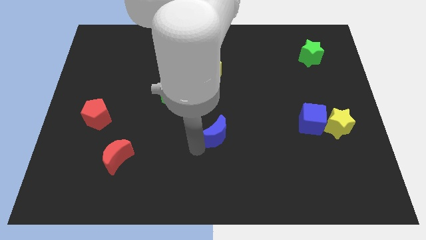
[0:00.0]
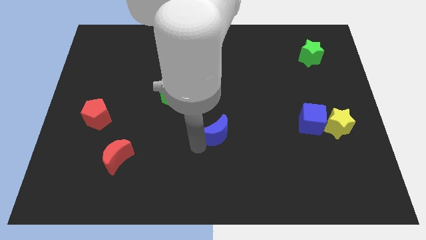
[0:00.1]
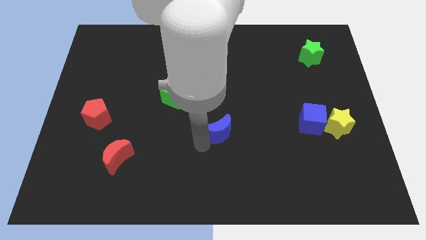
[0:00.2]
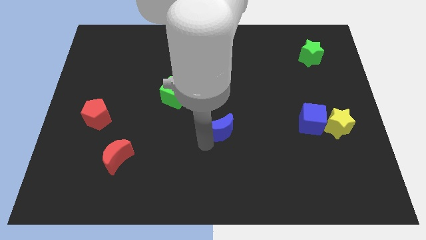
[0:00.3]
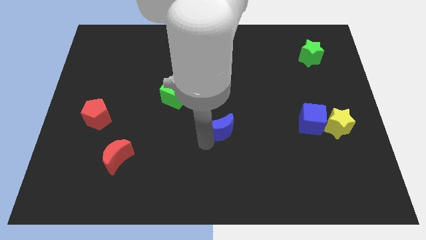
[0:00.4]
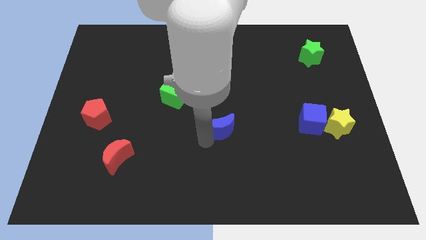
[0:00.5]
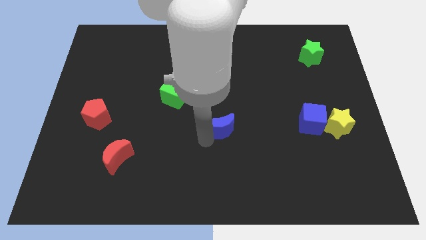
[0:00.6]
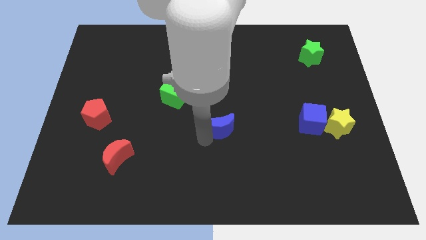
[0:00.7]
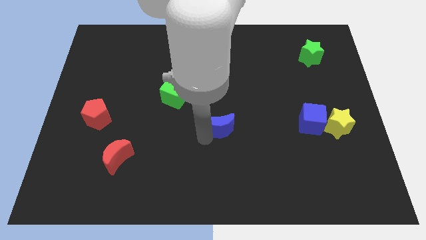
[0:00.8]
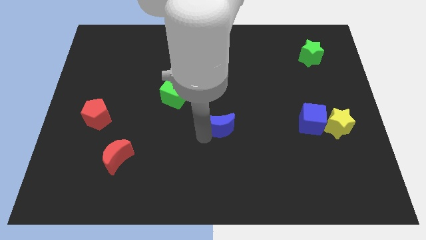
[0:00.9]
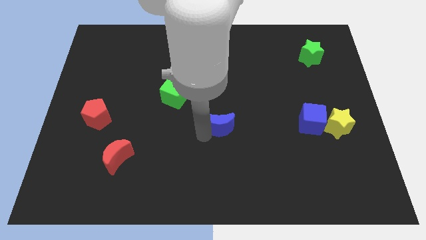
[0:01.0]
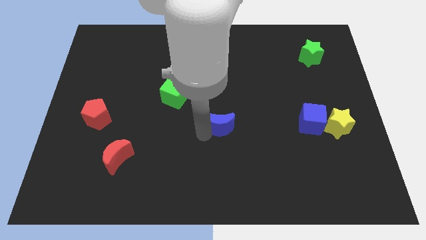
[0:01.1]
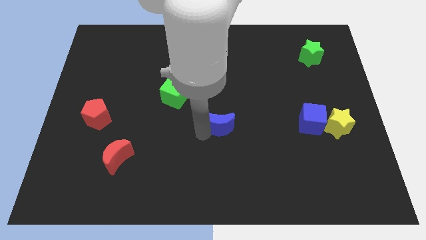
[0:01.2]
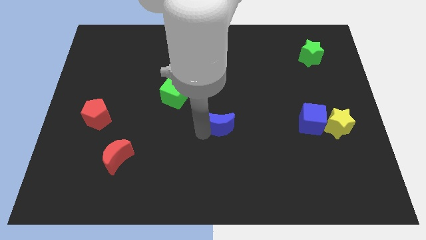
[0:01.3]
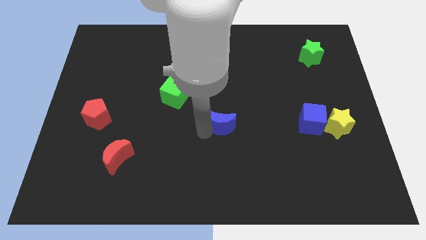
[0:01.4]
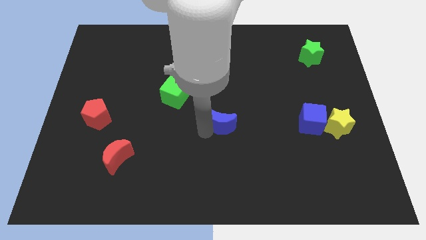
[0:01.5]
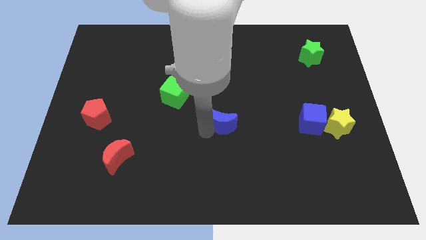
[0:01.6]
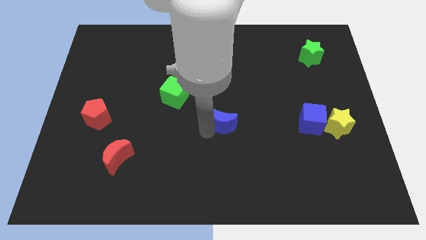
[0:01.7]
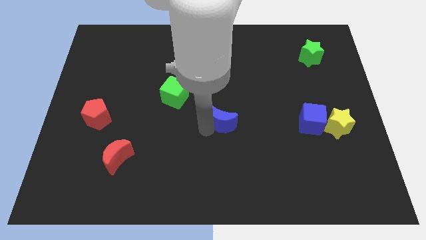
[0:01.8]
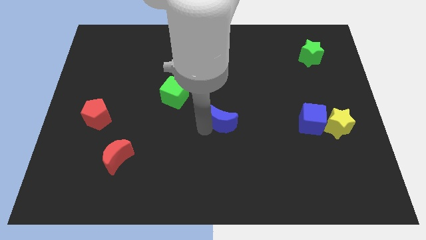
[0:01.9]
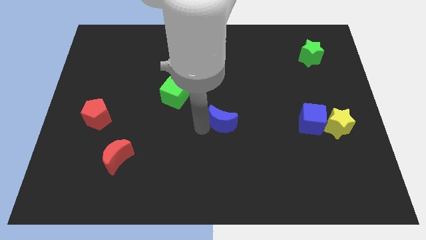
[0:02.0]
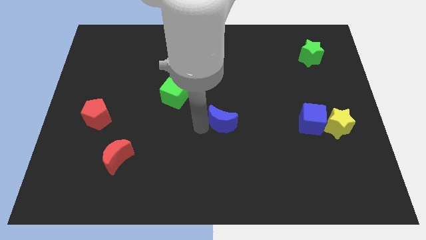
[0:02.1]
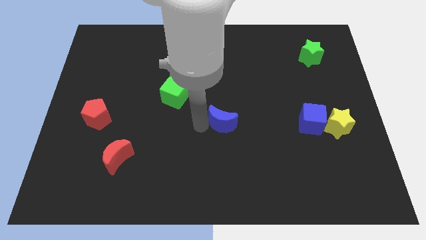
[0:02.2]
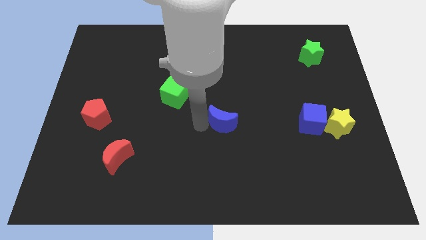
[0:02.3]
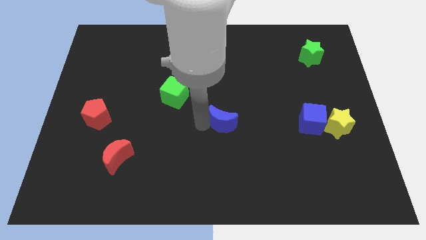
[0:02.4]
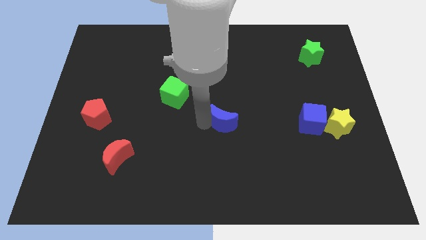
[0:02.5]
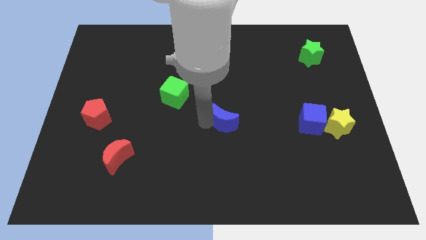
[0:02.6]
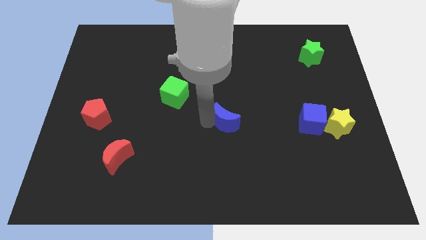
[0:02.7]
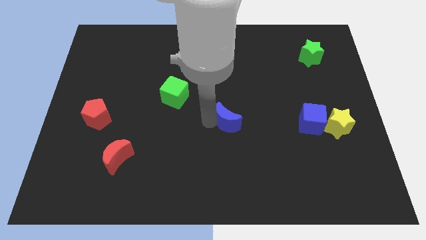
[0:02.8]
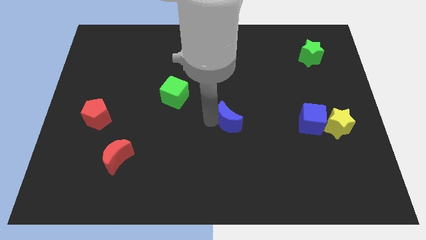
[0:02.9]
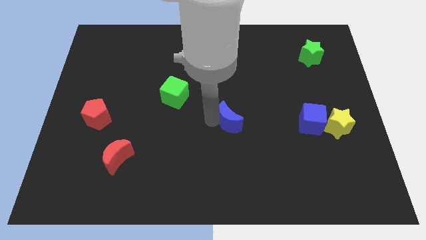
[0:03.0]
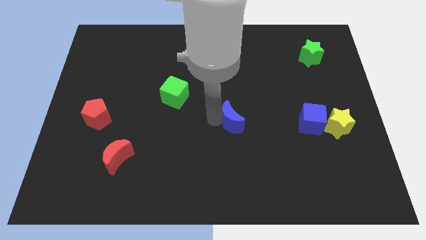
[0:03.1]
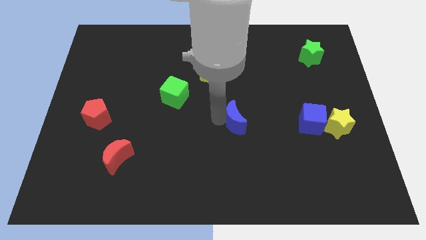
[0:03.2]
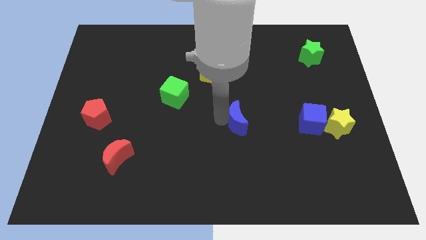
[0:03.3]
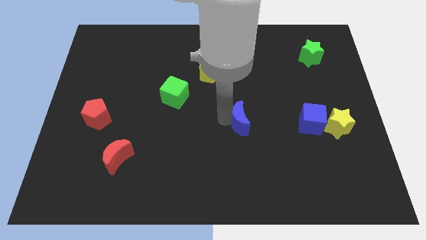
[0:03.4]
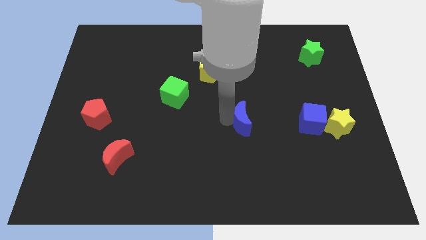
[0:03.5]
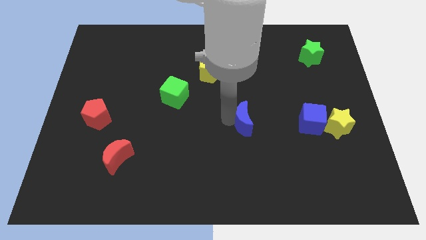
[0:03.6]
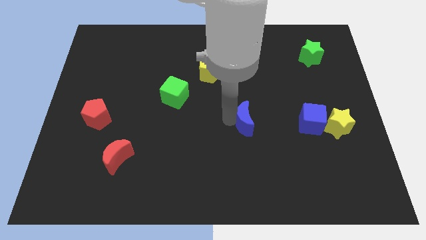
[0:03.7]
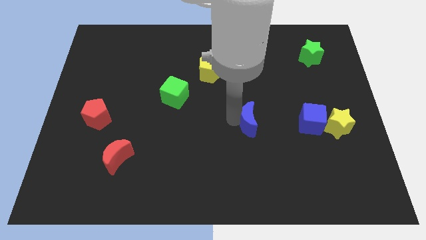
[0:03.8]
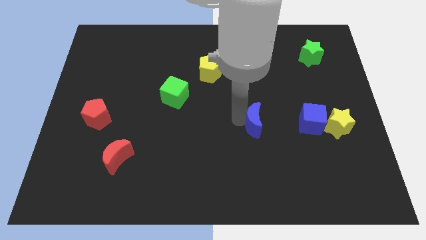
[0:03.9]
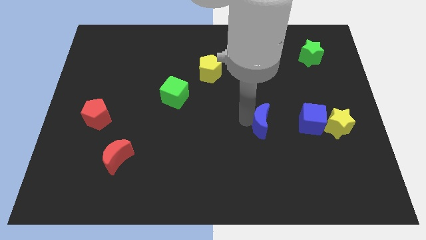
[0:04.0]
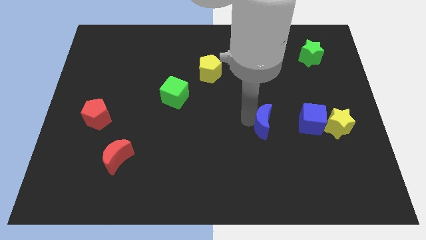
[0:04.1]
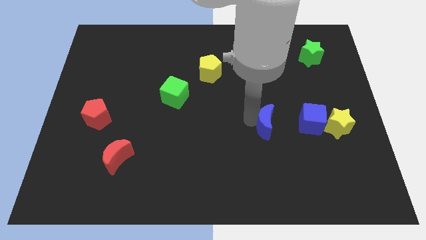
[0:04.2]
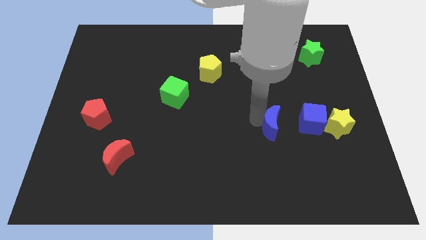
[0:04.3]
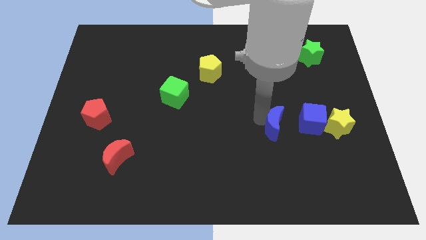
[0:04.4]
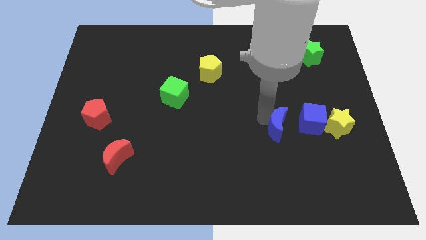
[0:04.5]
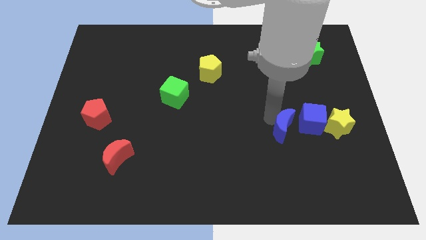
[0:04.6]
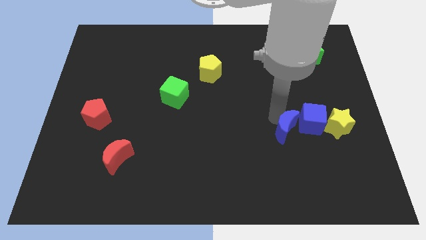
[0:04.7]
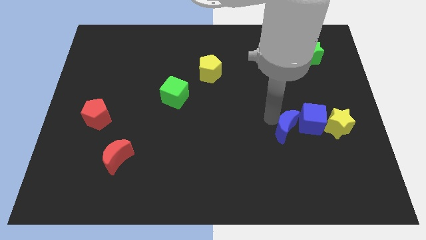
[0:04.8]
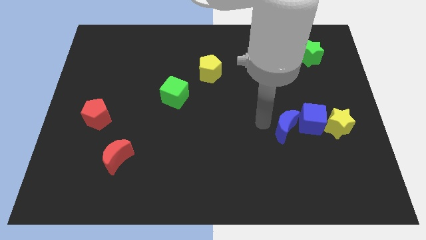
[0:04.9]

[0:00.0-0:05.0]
push blue moon into blue cube

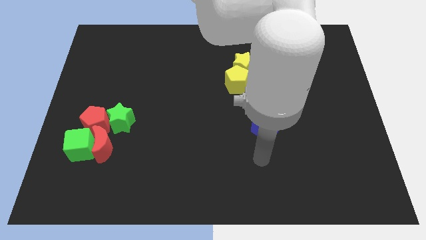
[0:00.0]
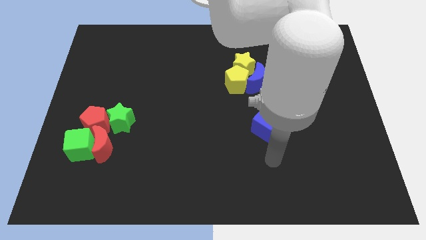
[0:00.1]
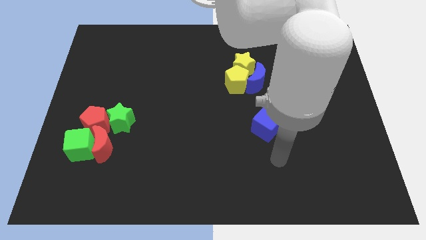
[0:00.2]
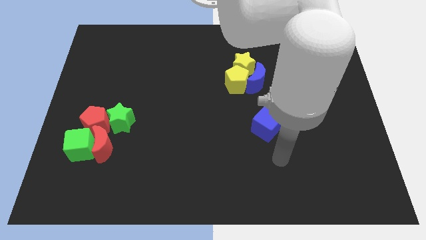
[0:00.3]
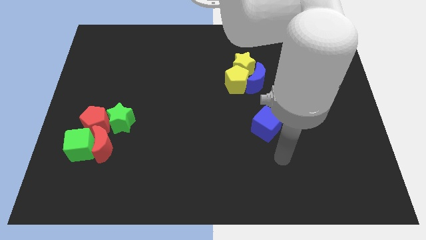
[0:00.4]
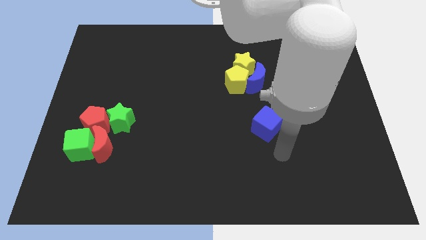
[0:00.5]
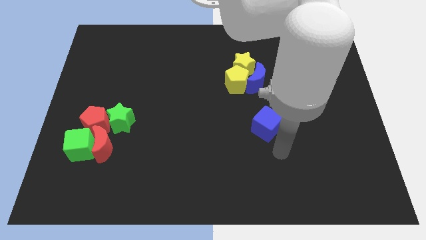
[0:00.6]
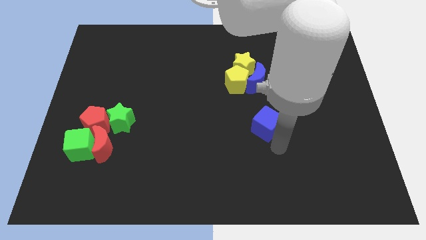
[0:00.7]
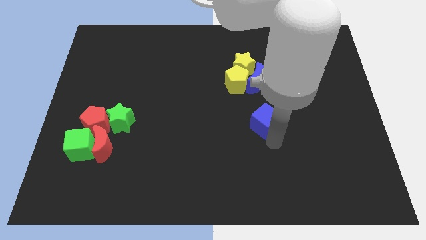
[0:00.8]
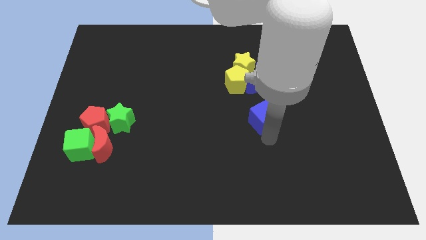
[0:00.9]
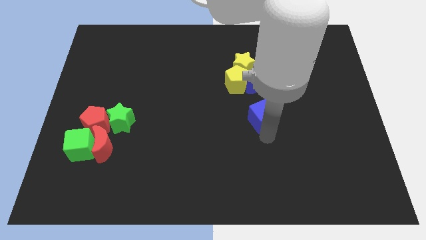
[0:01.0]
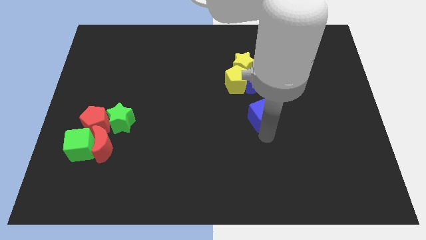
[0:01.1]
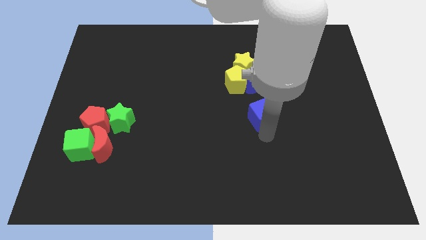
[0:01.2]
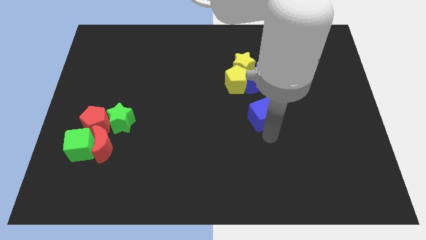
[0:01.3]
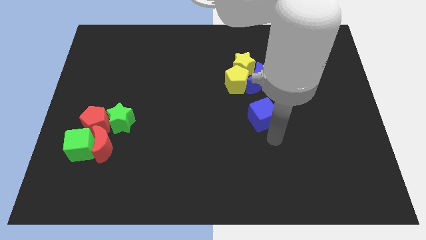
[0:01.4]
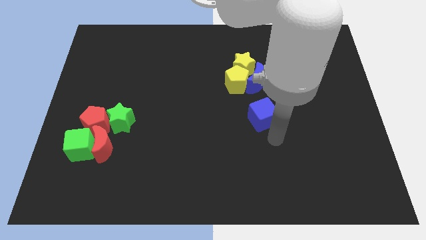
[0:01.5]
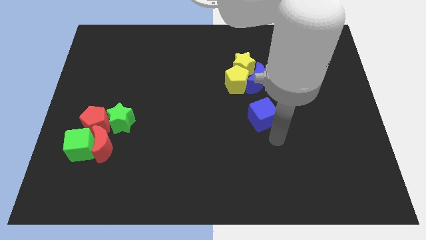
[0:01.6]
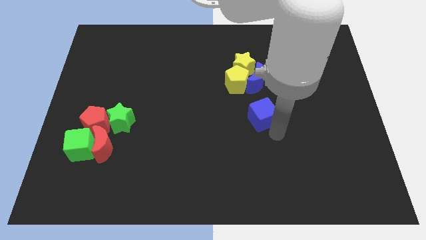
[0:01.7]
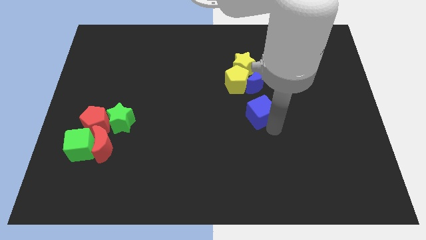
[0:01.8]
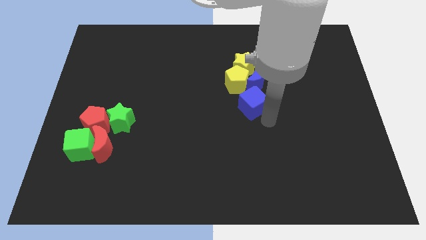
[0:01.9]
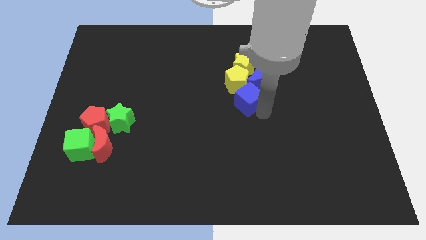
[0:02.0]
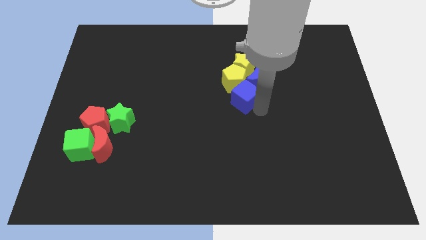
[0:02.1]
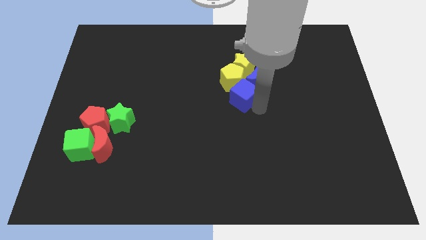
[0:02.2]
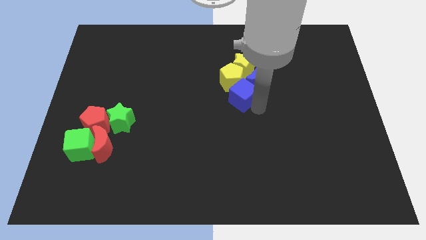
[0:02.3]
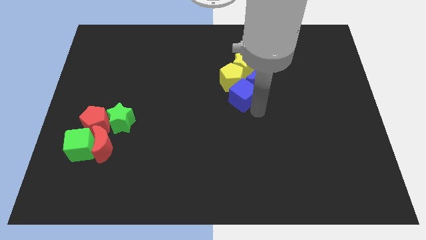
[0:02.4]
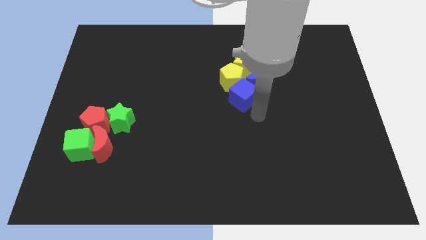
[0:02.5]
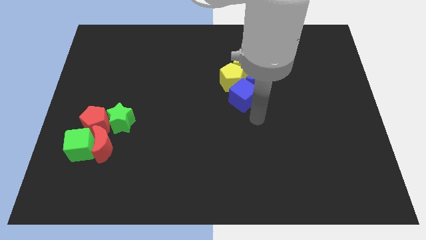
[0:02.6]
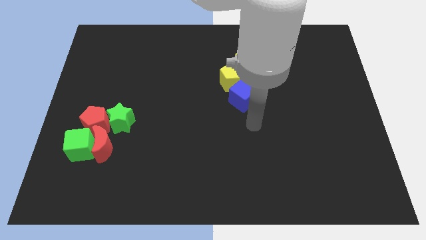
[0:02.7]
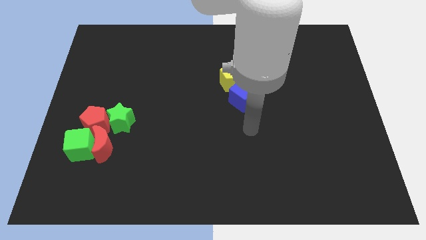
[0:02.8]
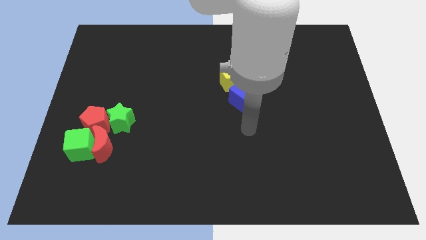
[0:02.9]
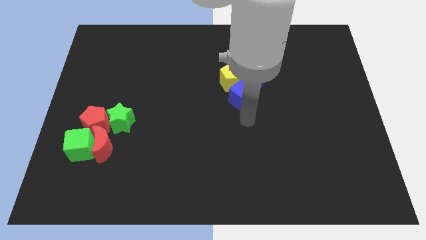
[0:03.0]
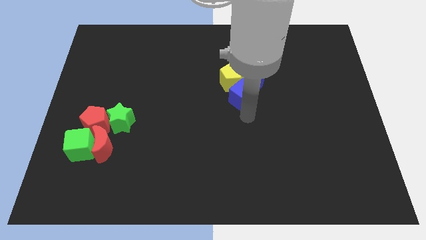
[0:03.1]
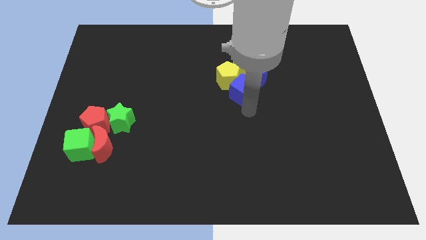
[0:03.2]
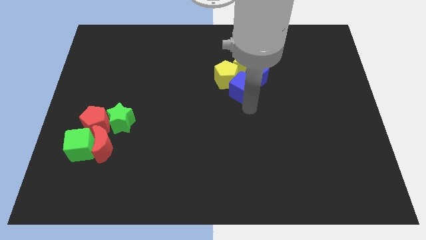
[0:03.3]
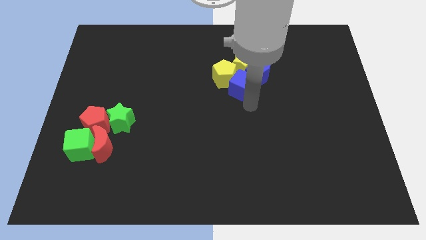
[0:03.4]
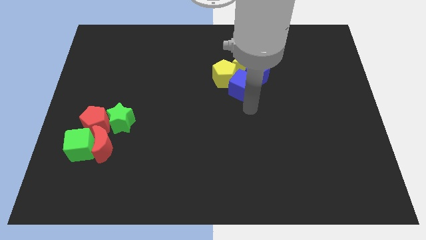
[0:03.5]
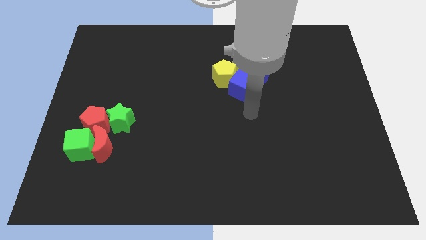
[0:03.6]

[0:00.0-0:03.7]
slide the blue cube into the yellow blocks

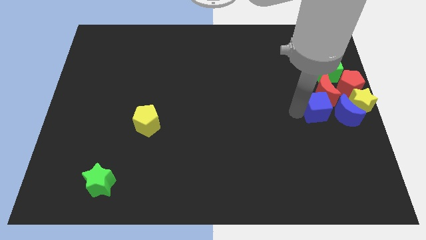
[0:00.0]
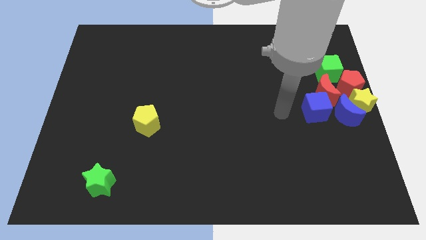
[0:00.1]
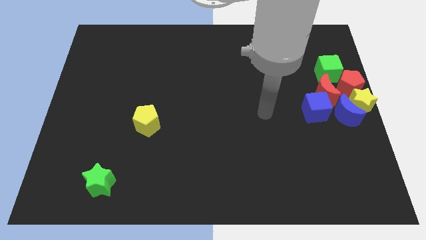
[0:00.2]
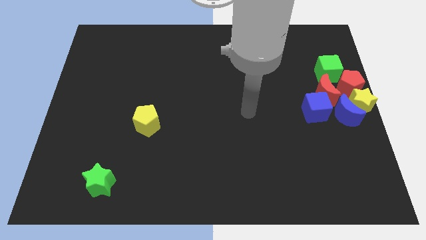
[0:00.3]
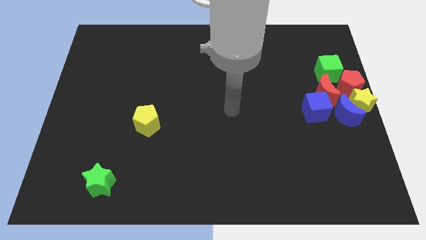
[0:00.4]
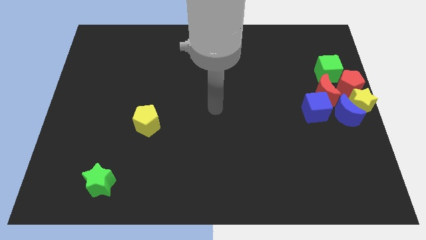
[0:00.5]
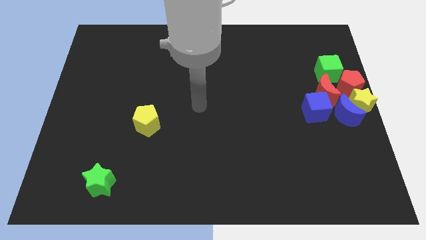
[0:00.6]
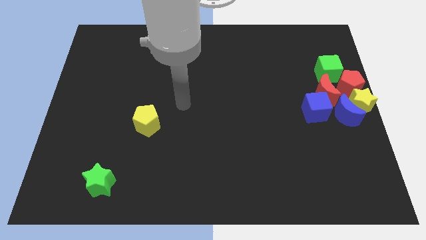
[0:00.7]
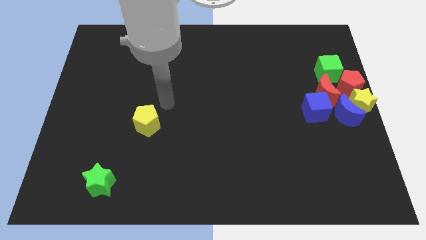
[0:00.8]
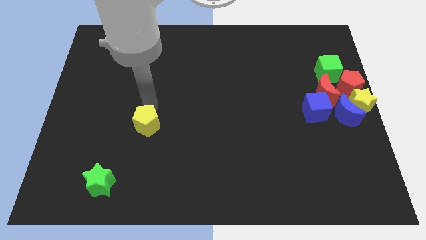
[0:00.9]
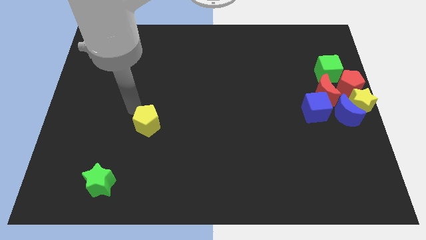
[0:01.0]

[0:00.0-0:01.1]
move arm above the yellow pentagon
